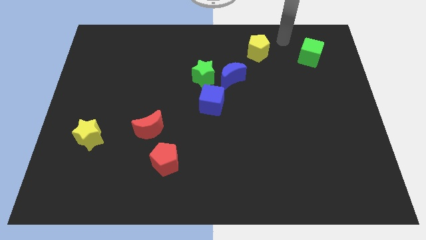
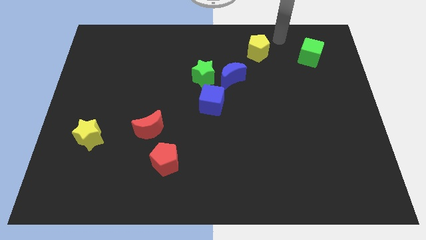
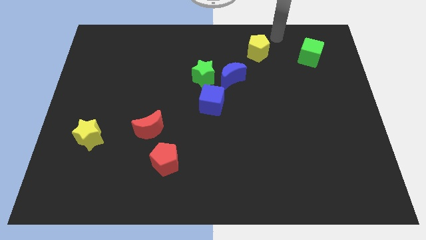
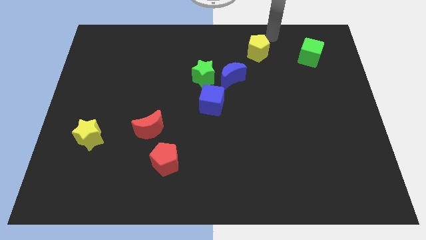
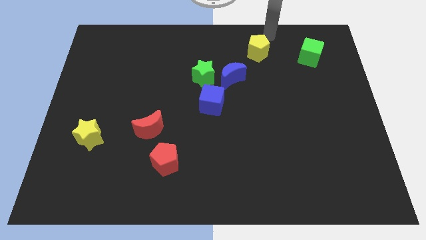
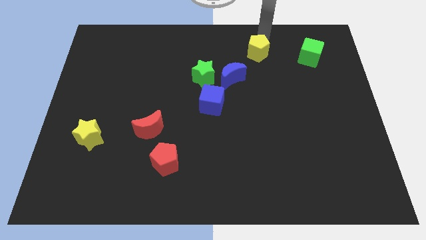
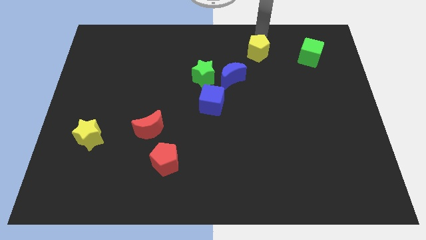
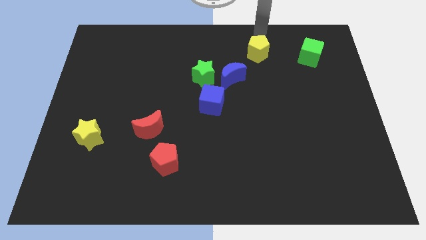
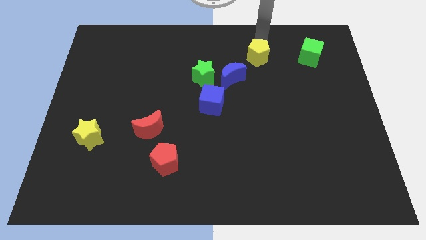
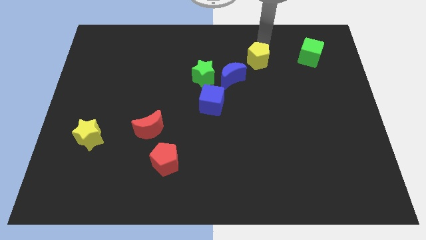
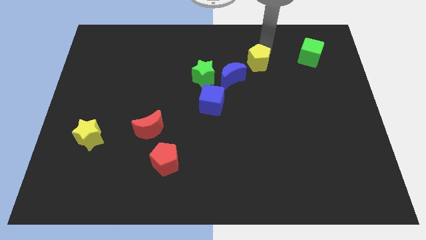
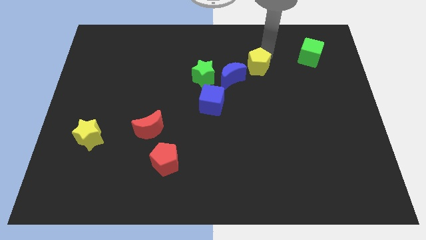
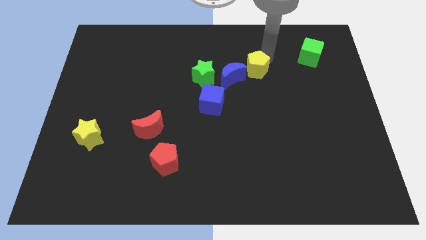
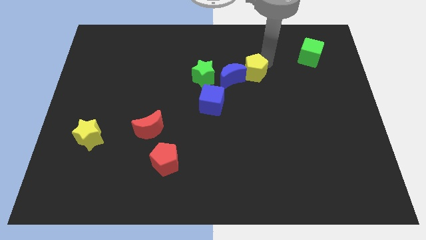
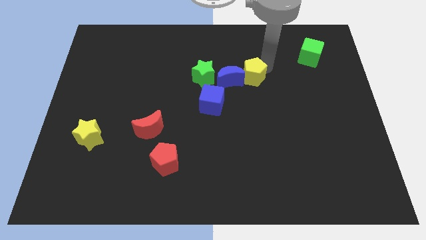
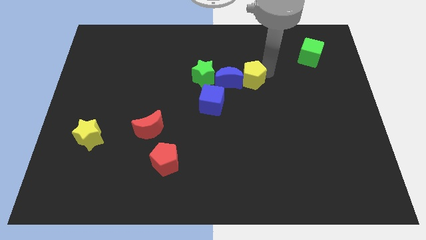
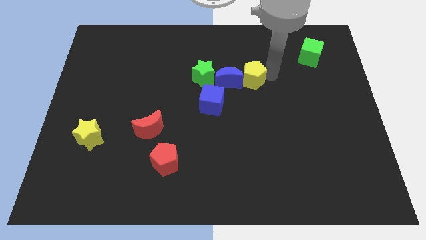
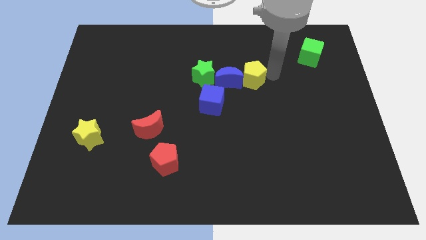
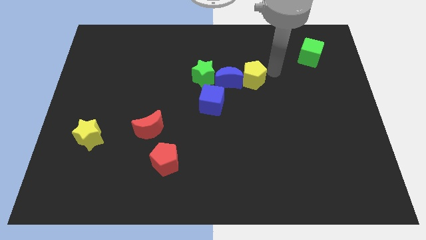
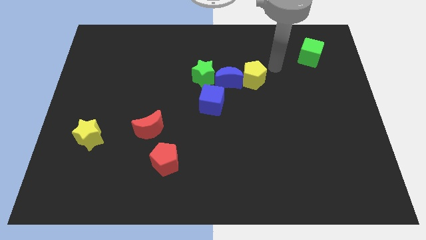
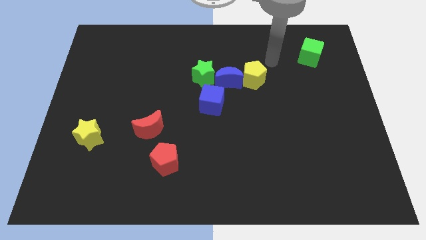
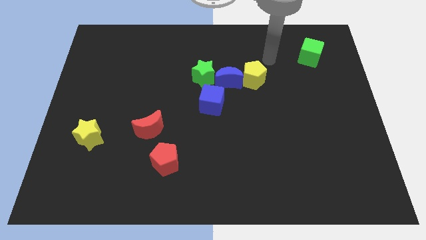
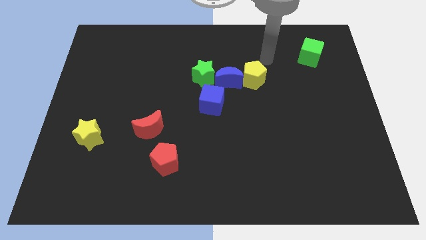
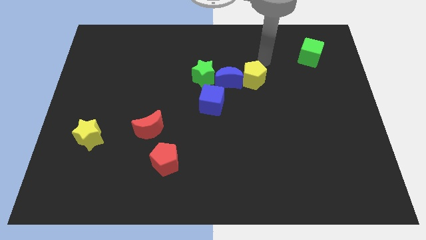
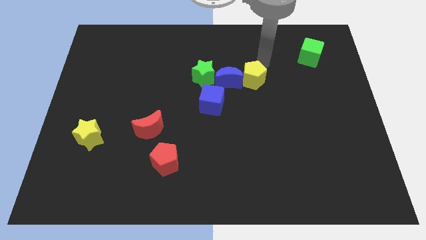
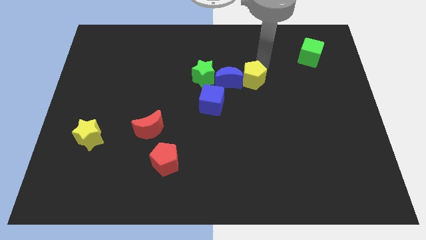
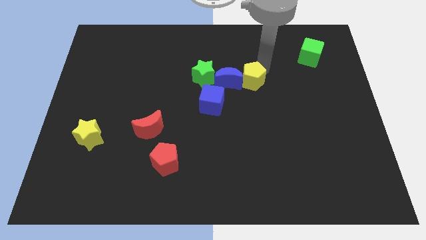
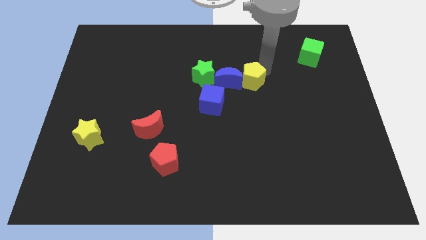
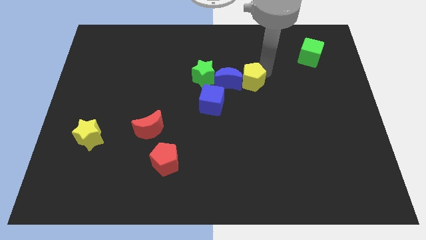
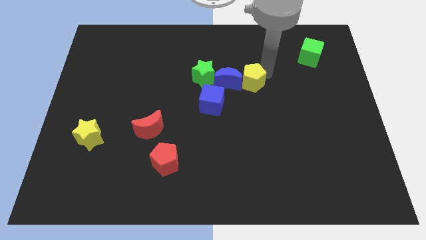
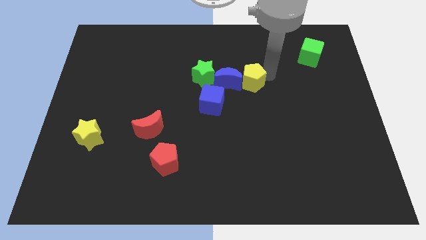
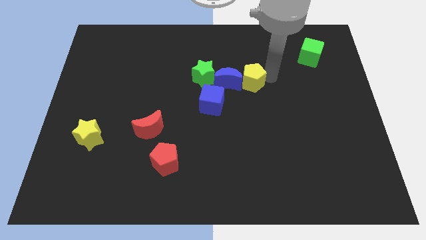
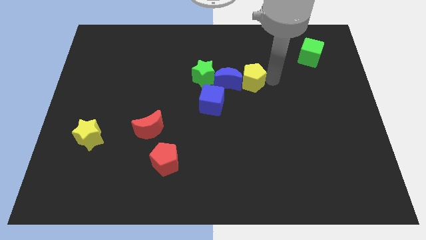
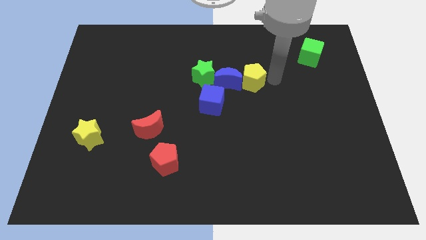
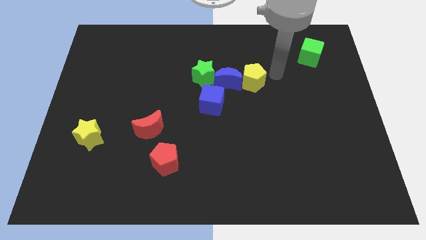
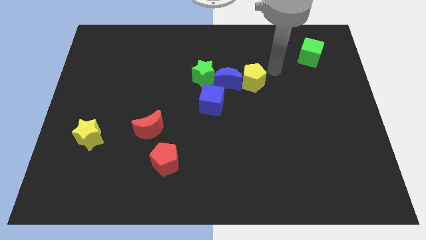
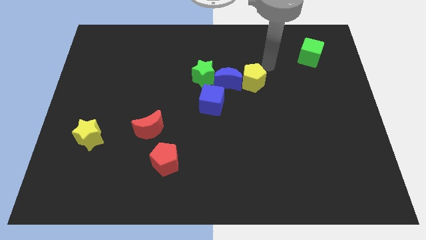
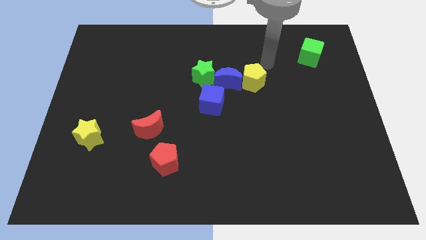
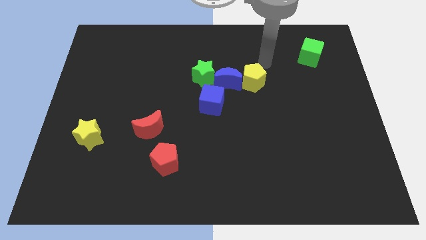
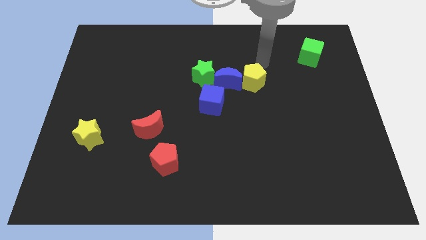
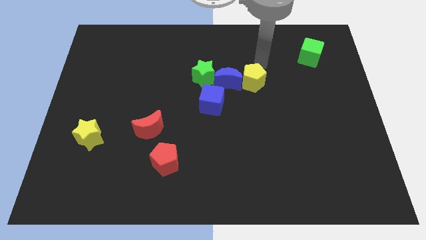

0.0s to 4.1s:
move the yellow pentagon into the blue crescent

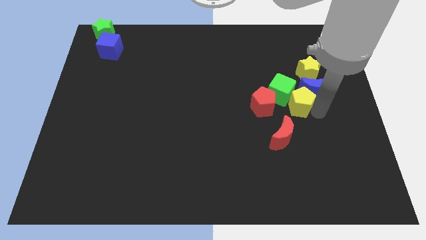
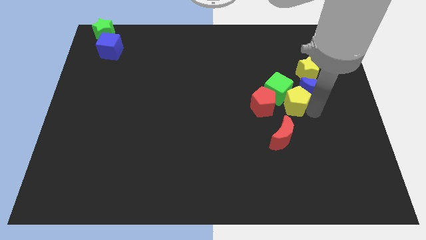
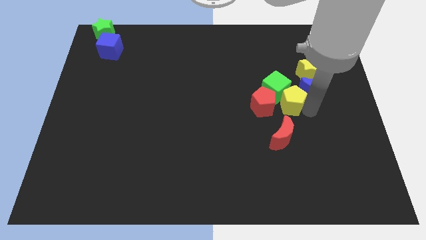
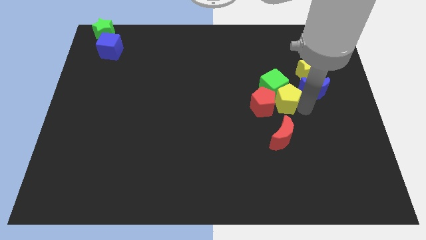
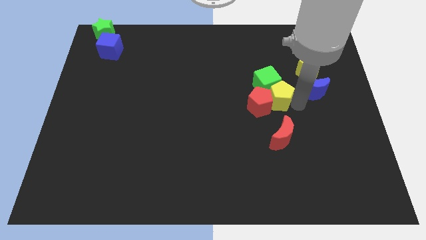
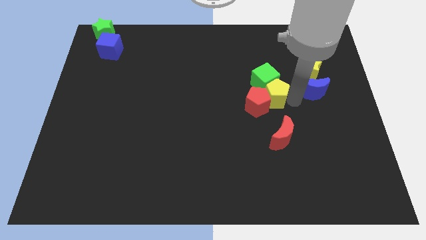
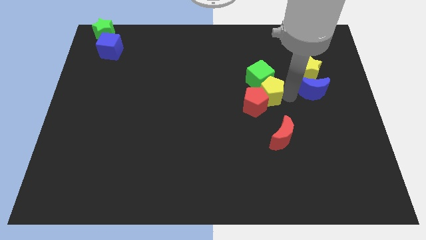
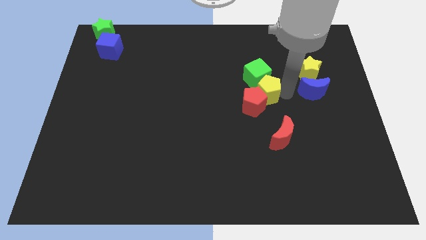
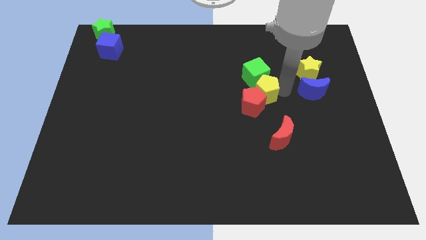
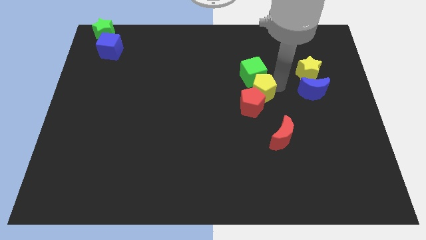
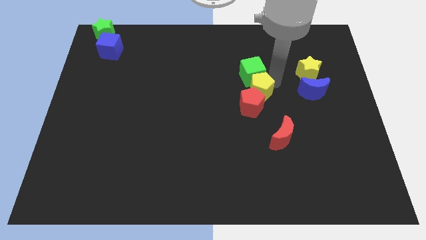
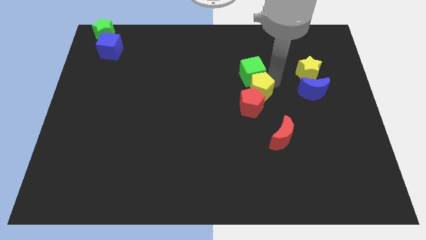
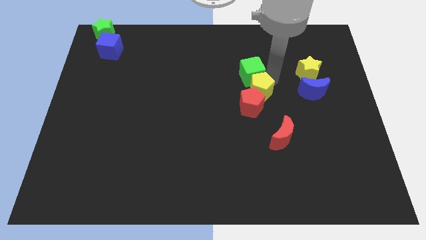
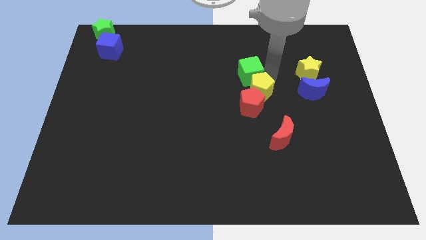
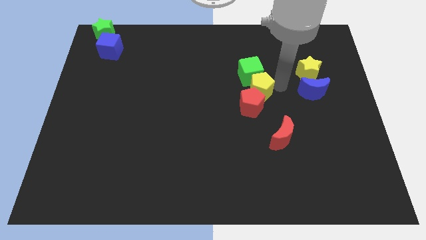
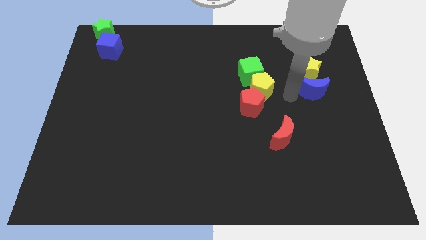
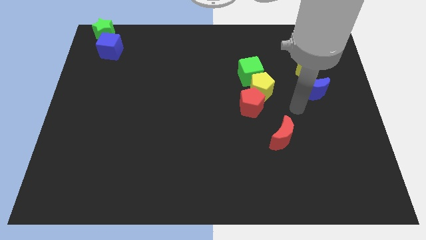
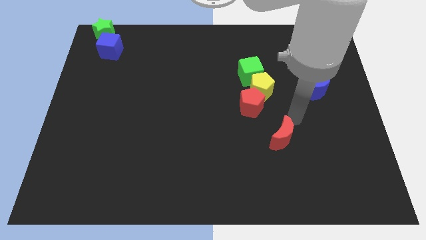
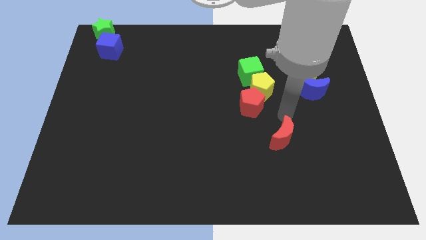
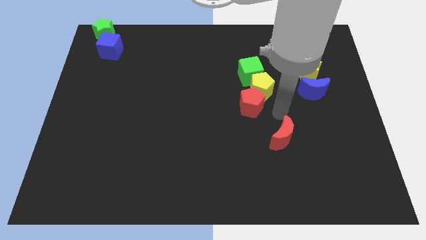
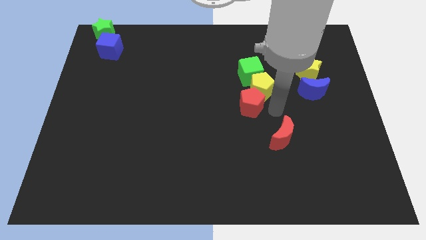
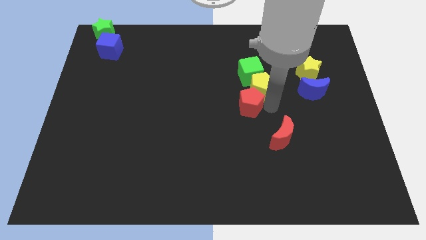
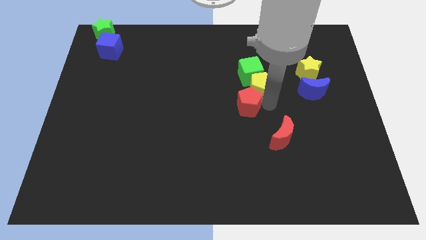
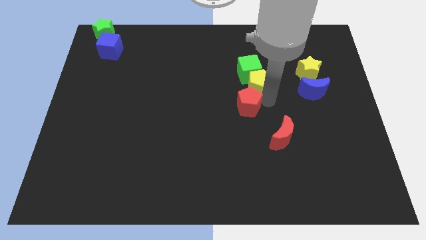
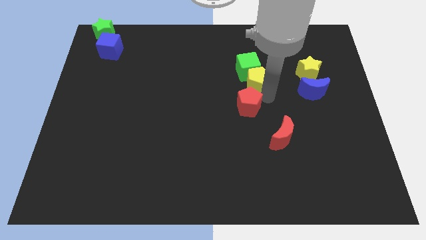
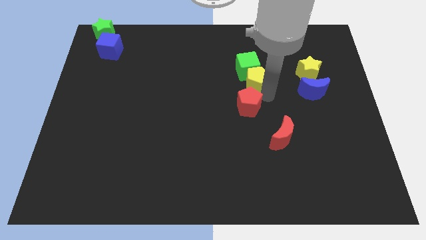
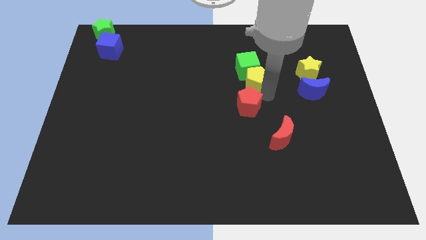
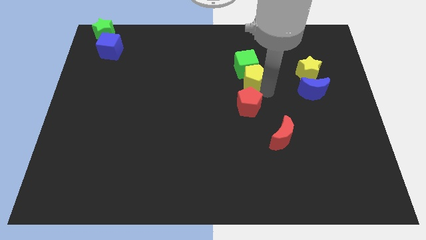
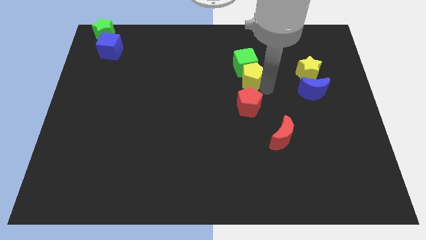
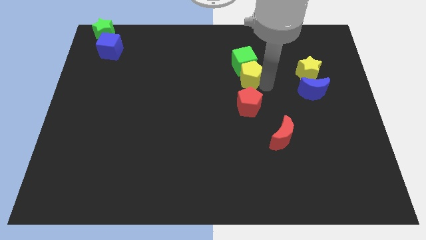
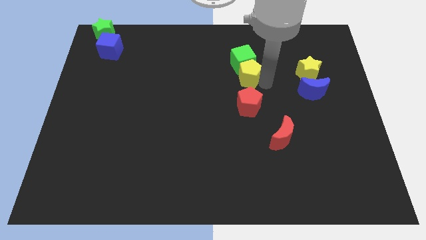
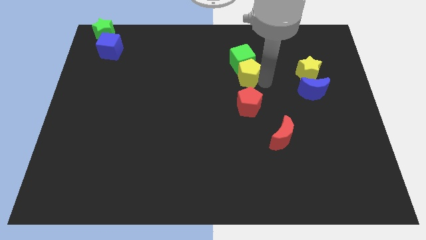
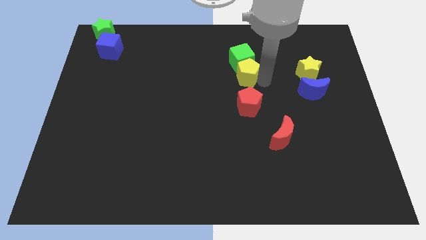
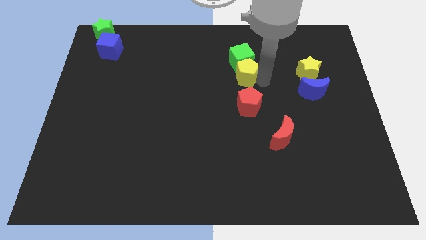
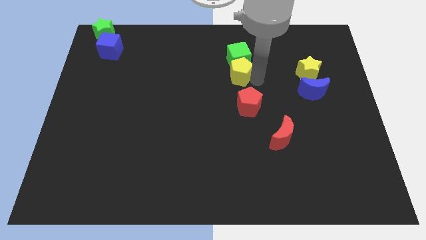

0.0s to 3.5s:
place the yellow pentagon and green cube above the red pentagon

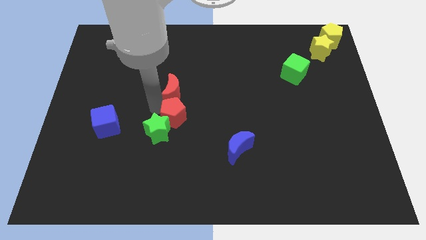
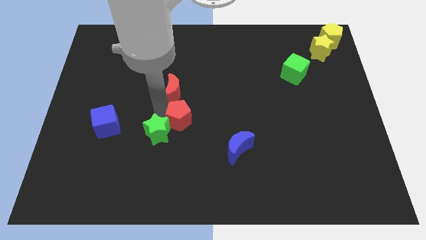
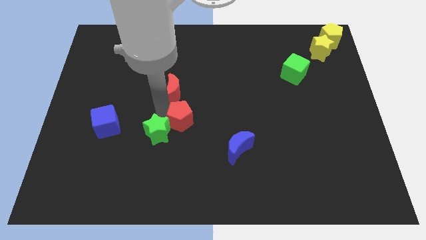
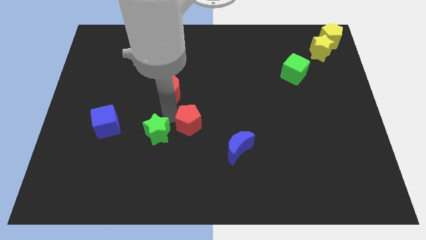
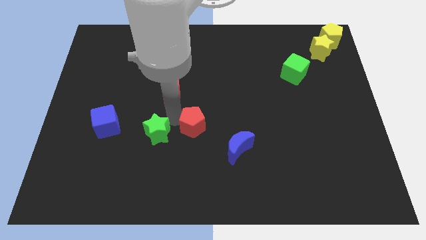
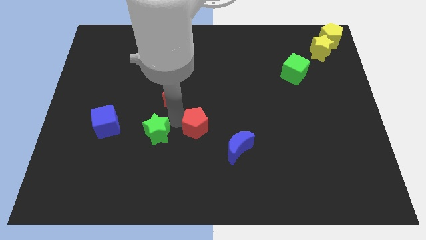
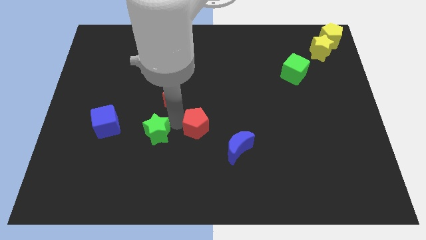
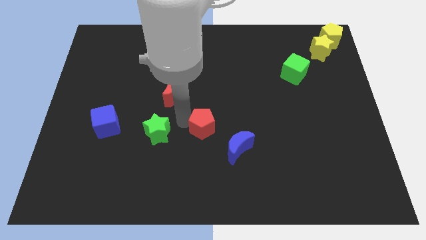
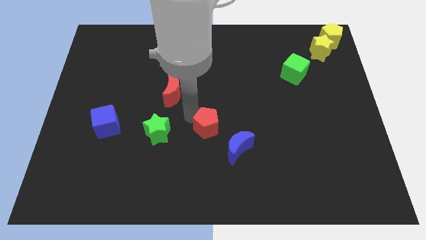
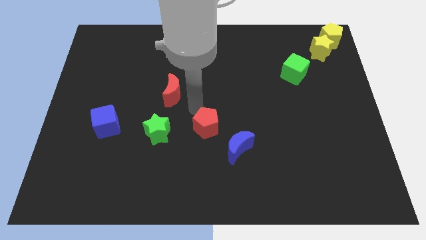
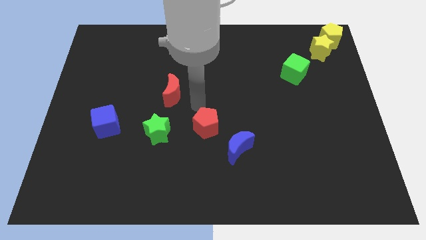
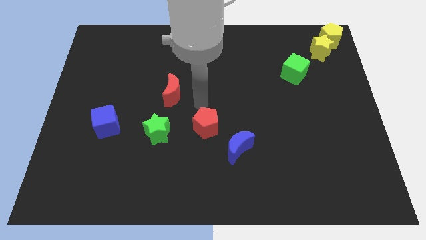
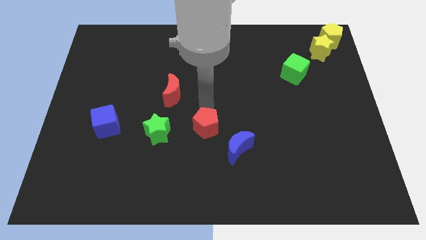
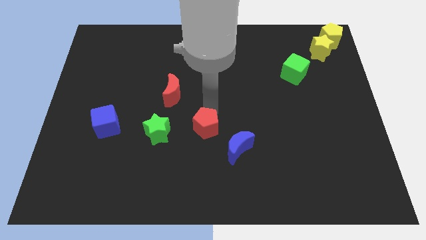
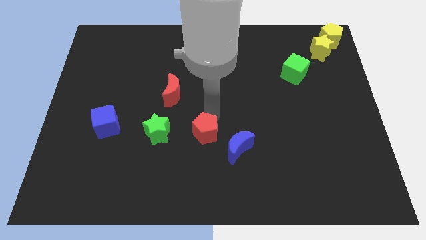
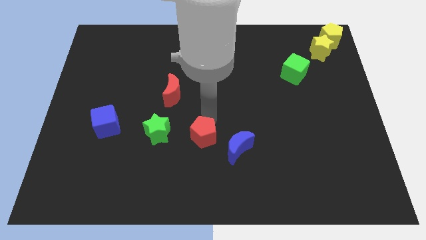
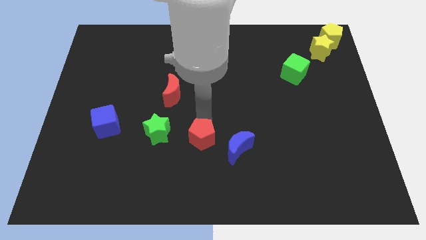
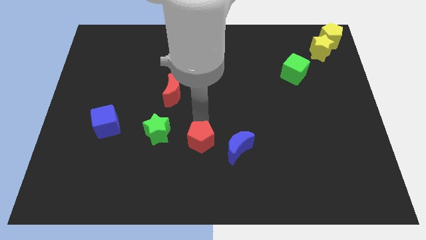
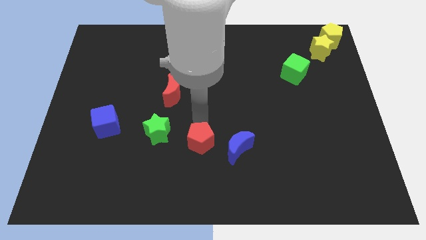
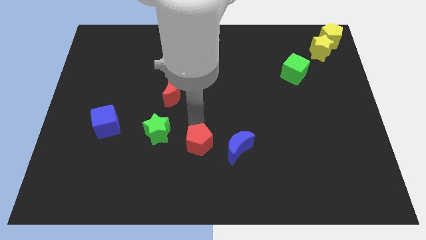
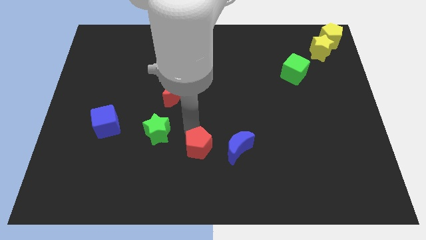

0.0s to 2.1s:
push red pentagon away from the red crescent
